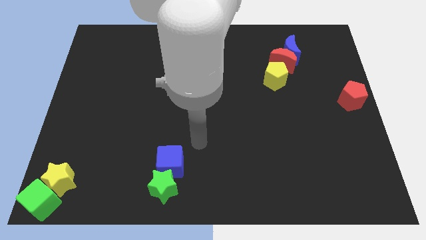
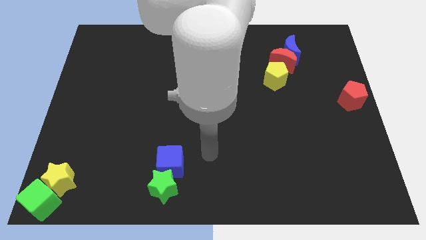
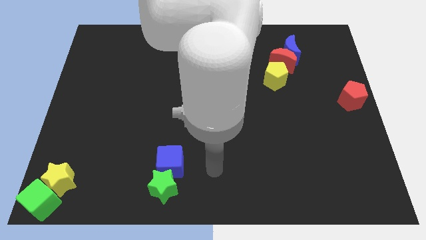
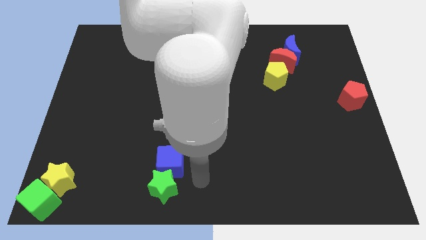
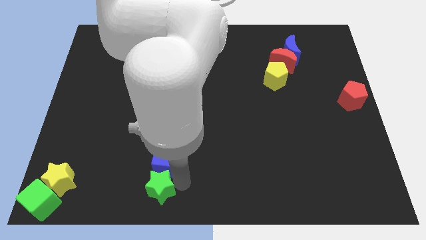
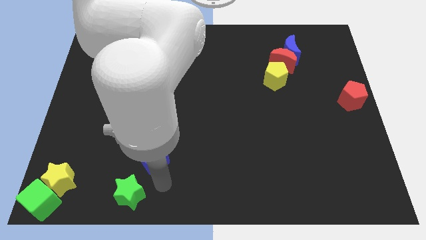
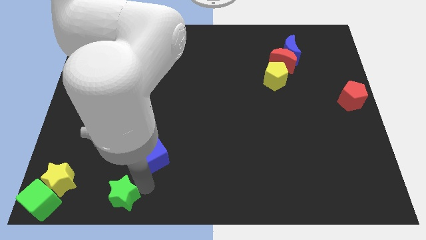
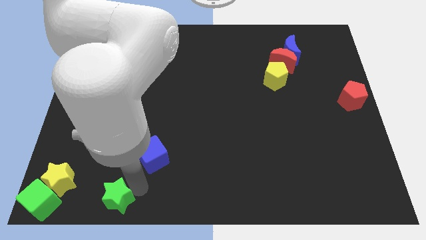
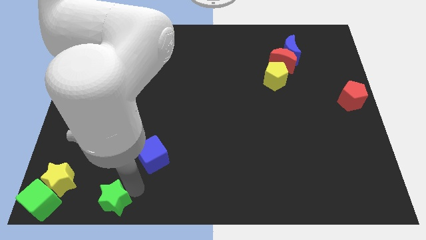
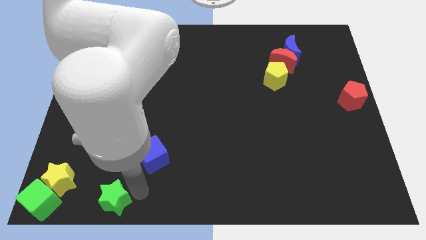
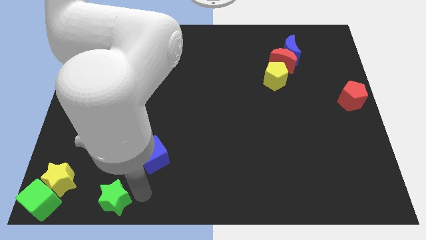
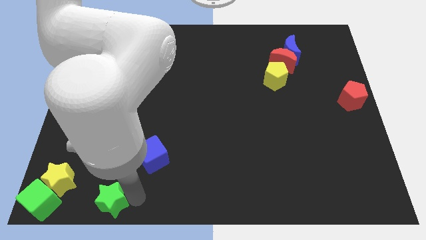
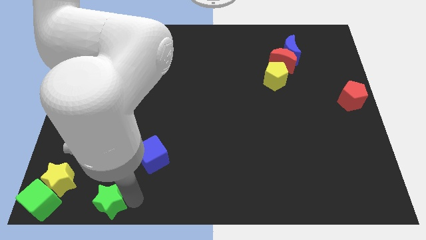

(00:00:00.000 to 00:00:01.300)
separate green star from the blue cube

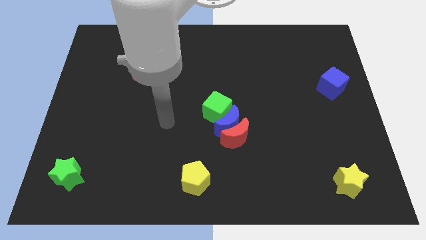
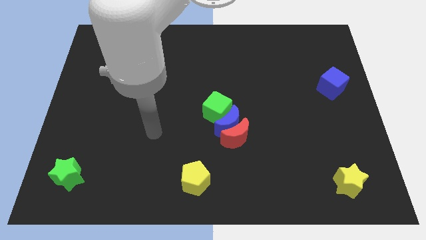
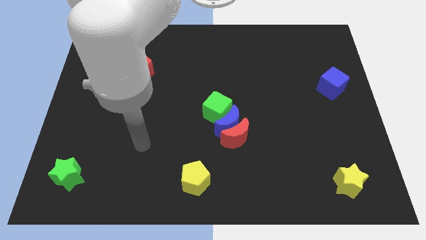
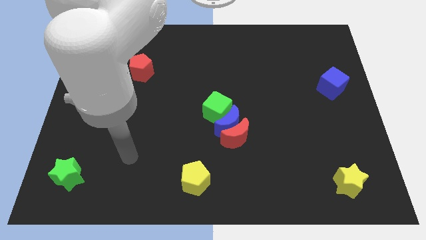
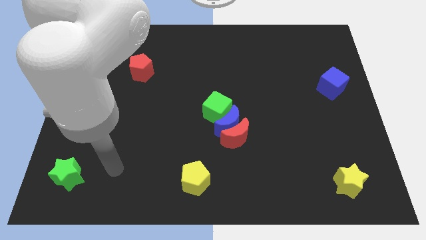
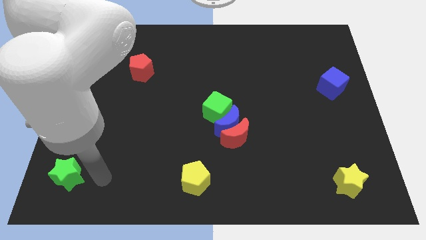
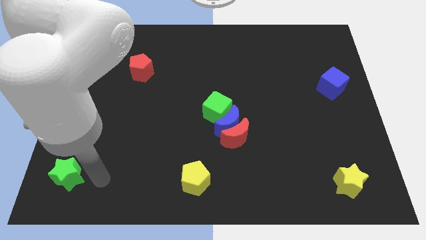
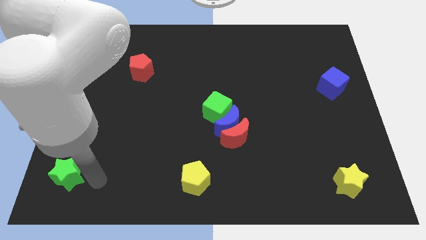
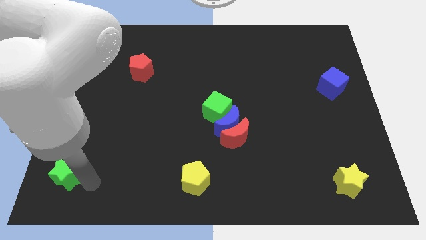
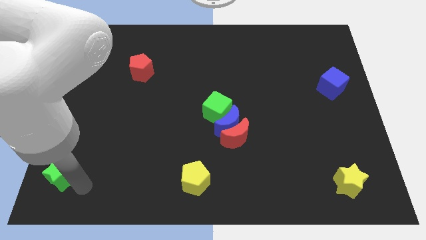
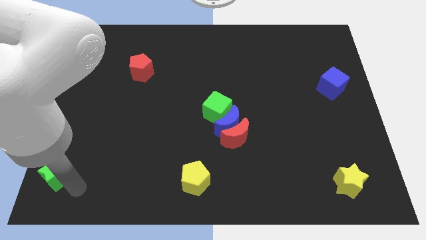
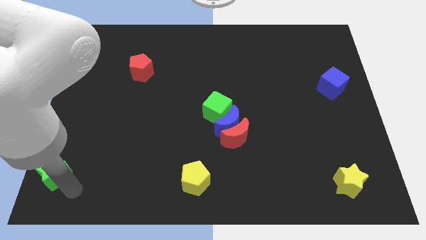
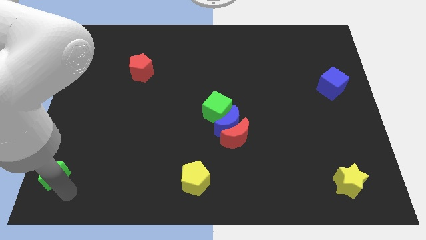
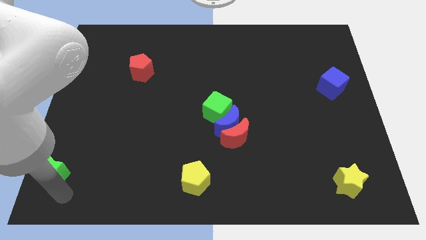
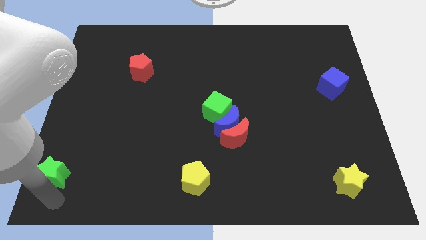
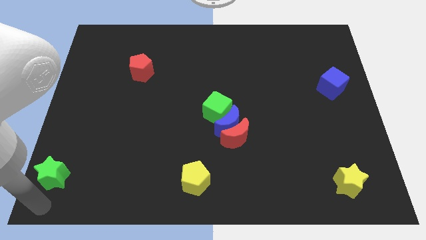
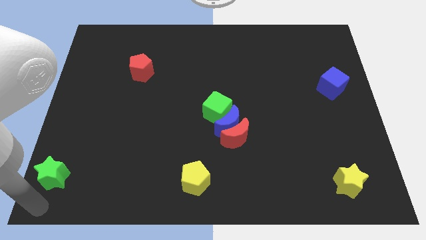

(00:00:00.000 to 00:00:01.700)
slightly move the green star to left side

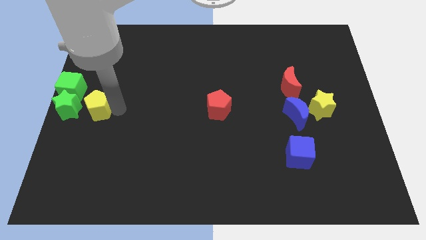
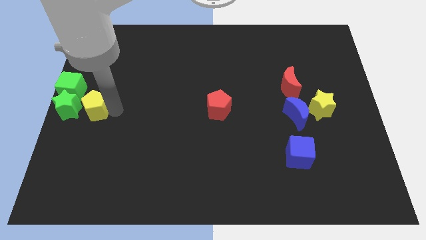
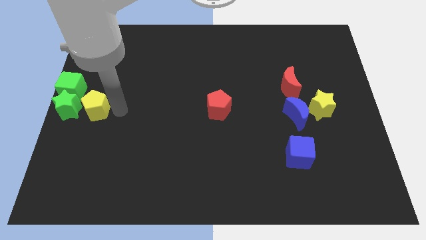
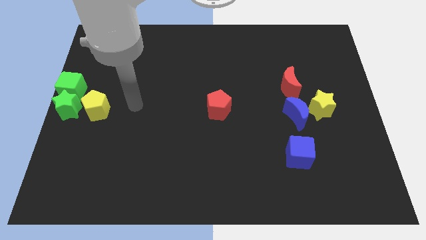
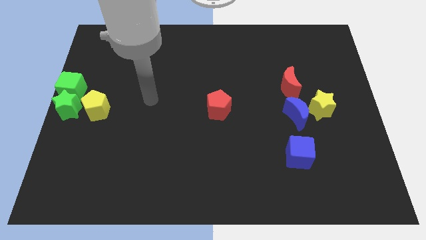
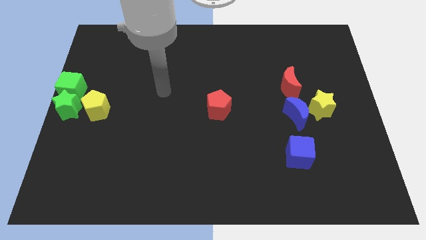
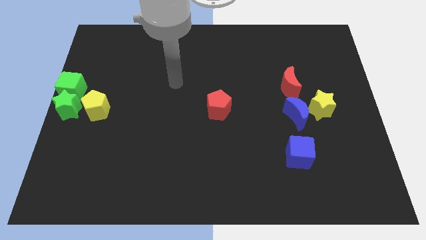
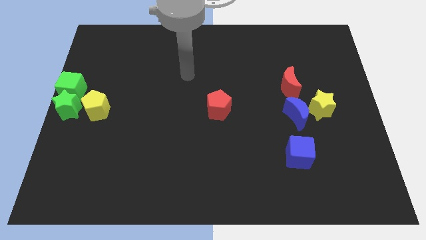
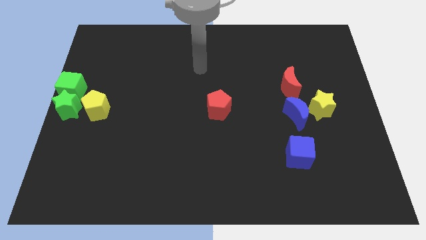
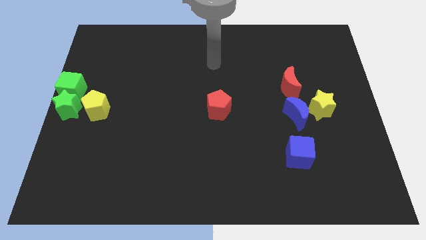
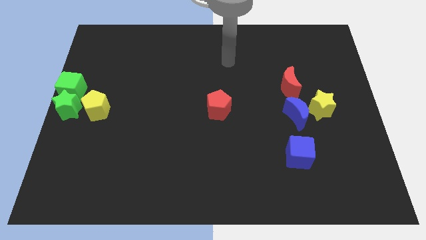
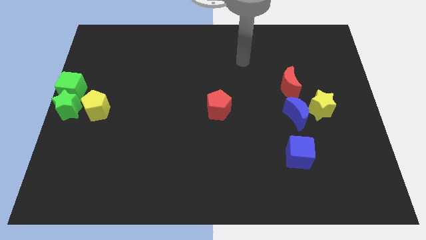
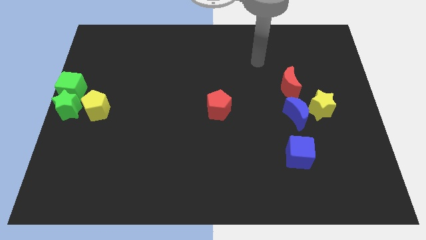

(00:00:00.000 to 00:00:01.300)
move your arm away from yellow pentagon

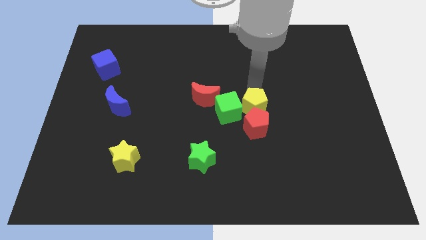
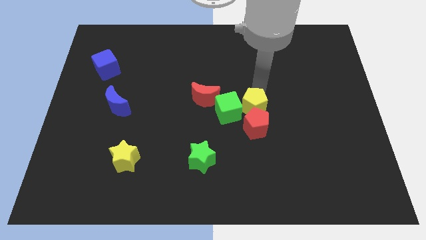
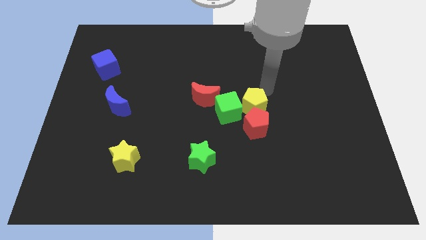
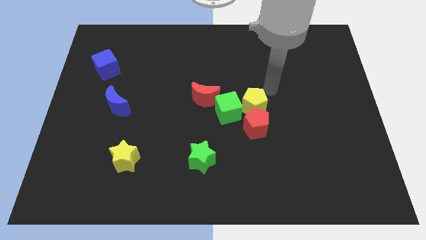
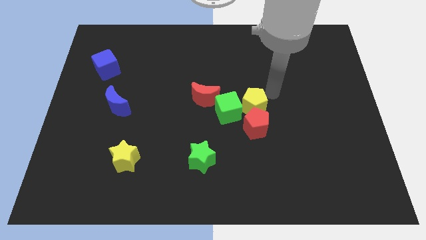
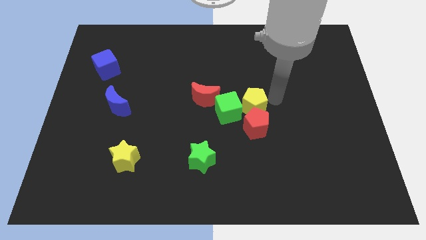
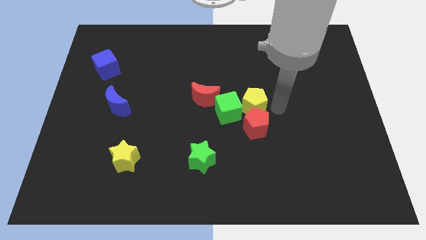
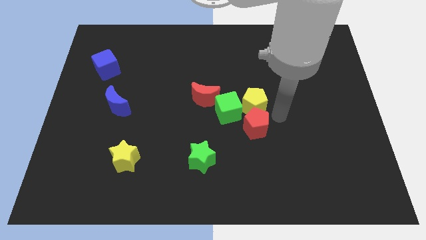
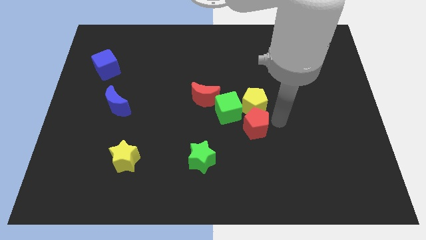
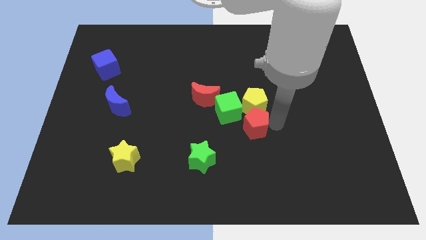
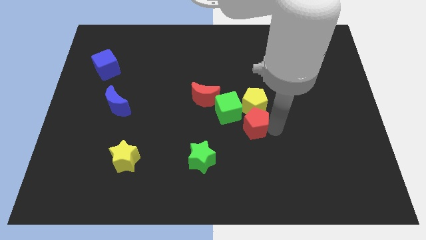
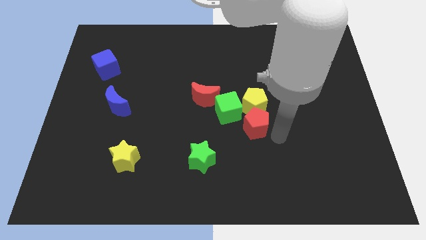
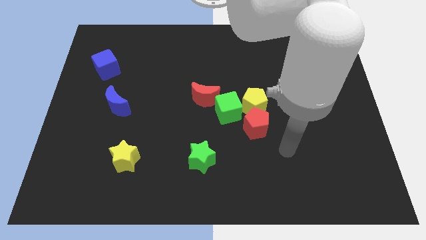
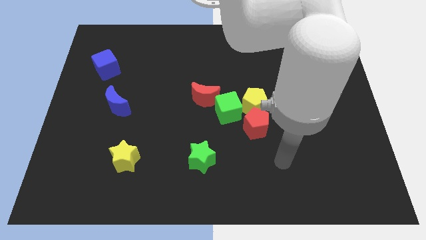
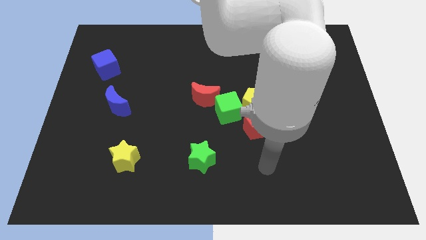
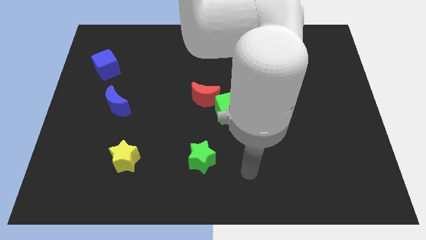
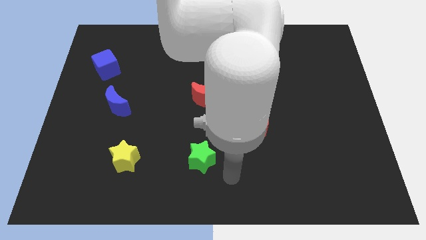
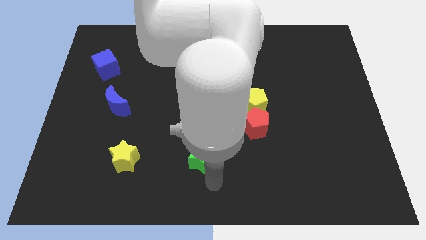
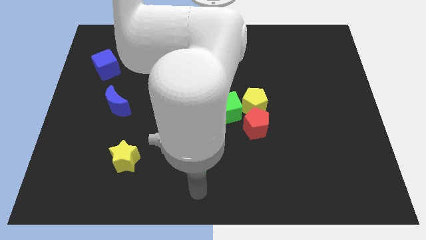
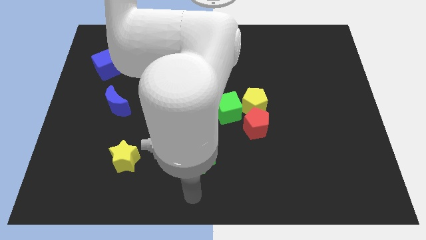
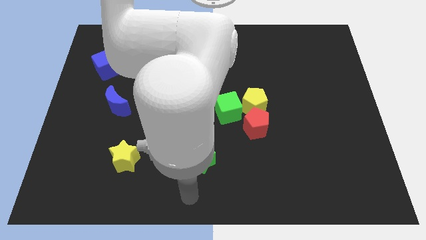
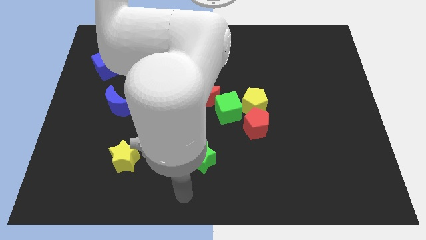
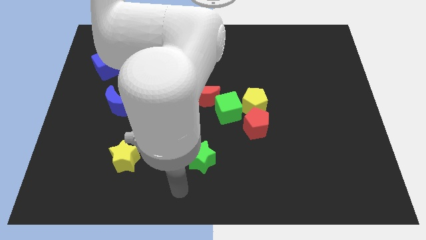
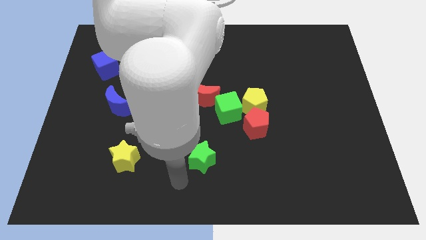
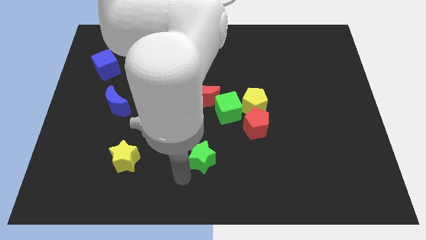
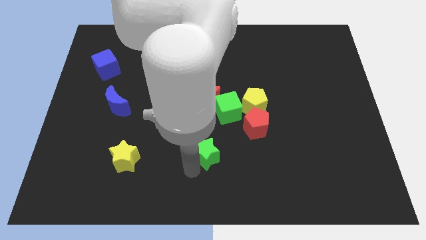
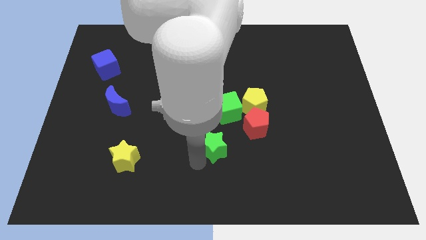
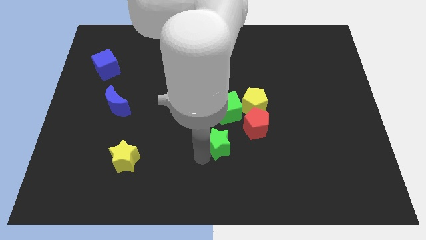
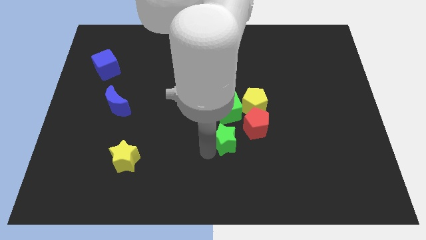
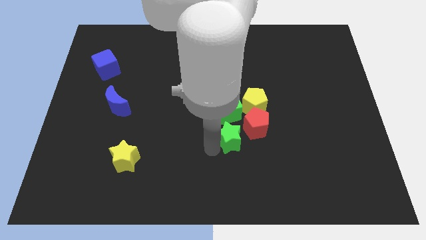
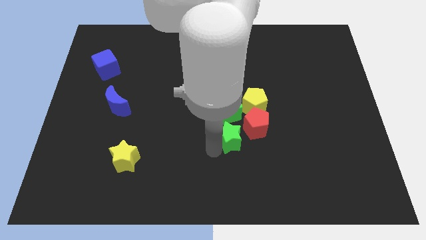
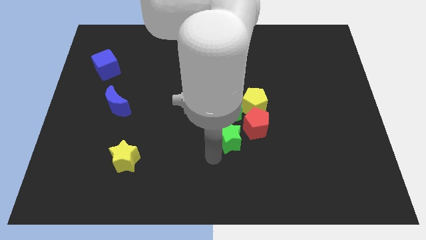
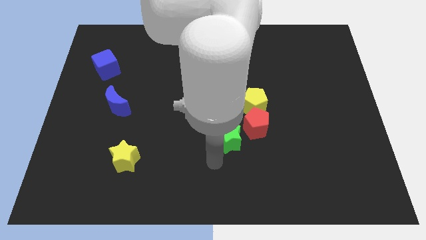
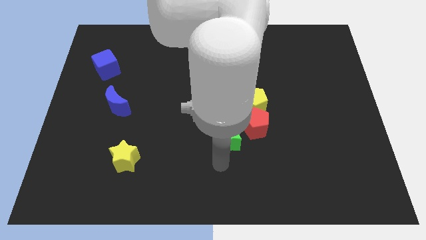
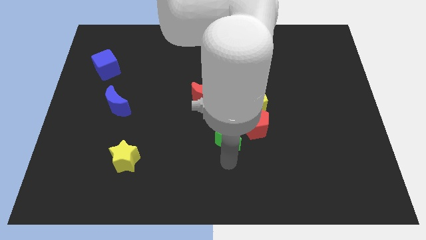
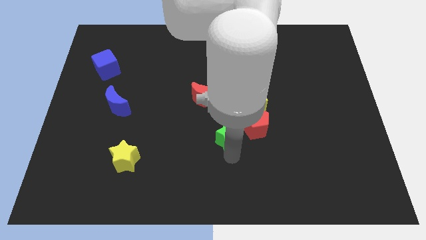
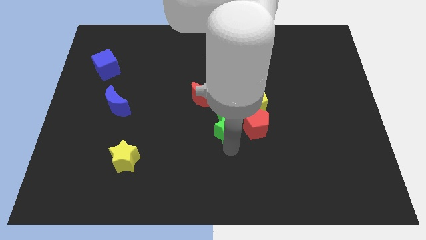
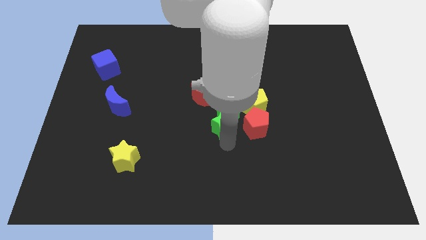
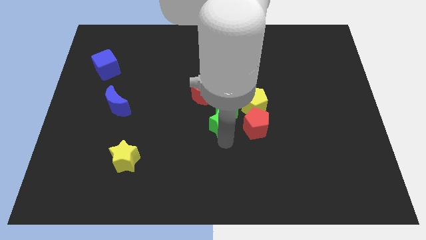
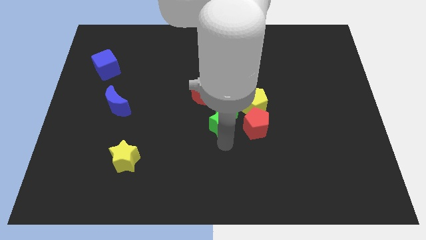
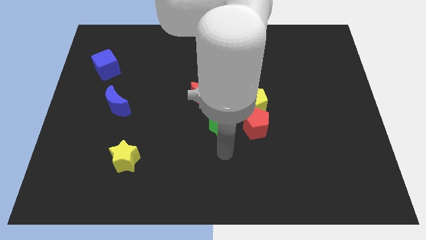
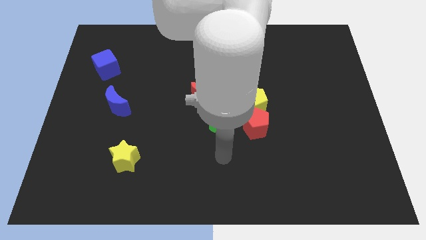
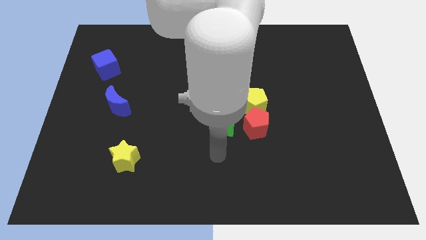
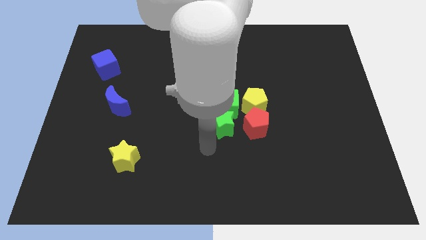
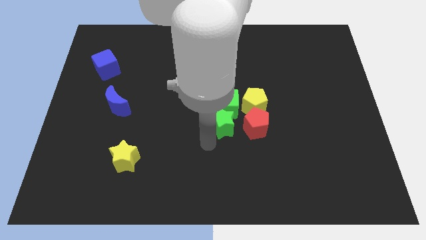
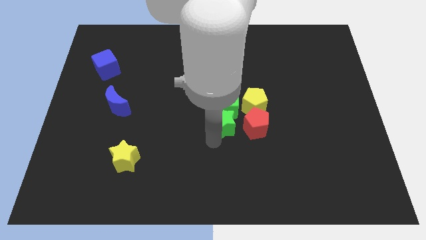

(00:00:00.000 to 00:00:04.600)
push the green star into green cube

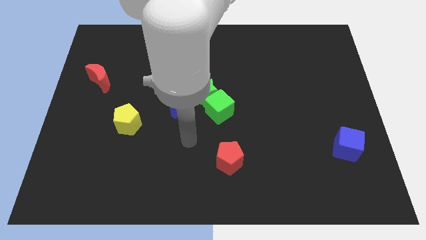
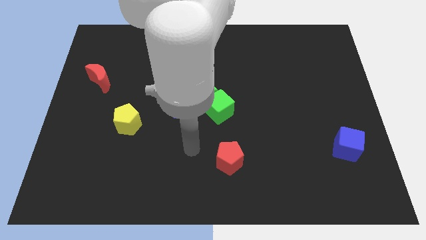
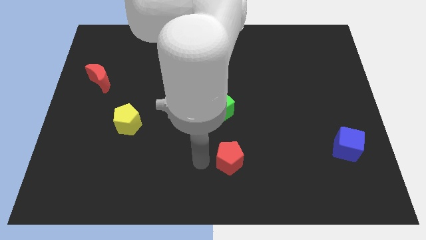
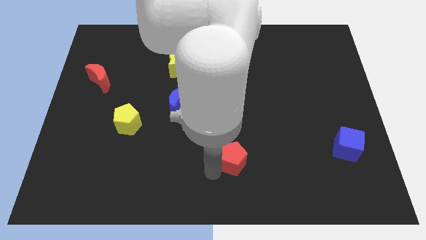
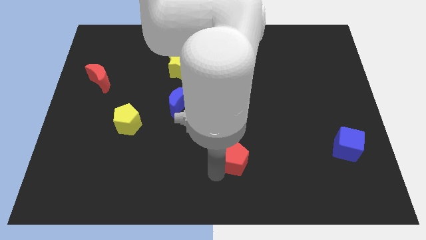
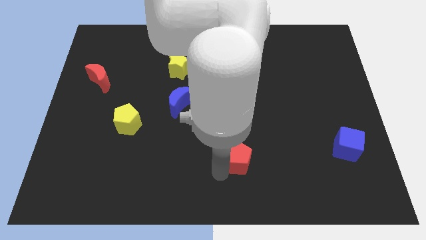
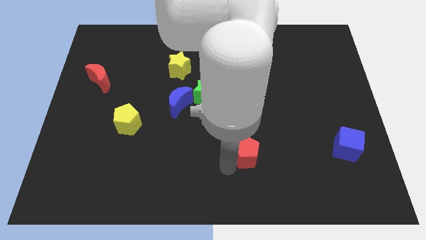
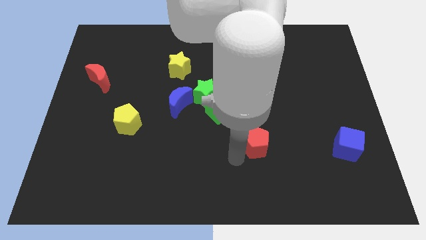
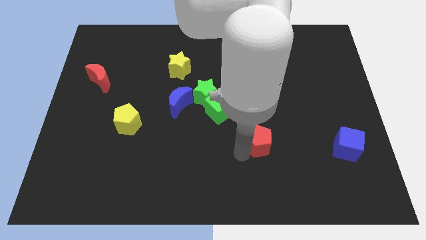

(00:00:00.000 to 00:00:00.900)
move the red penatgon to the left fo the blue cube
